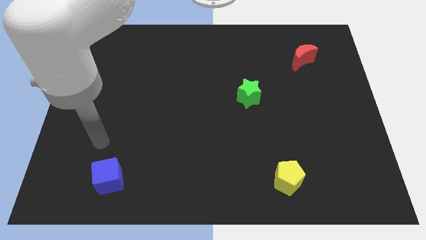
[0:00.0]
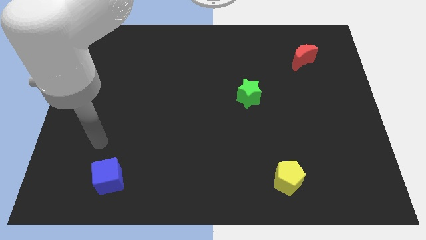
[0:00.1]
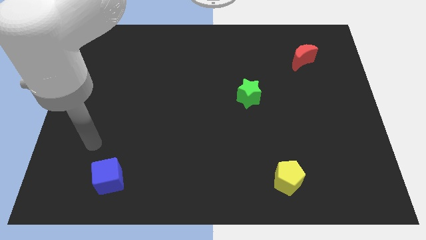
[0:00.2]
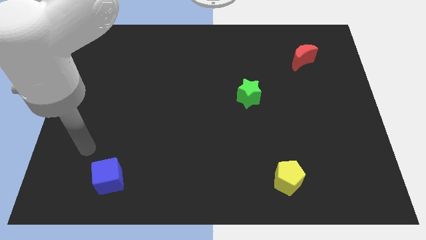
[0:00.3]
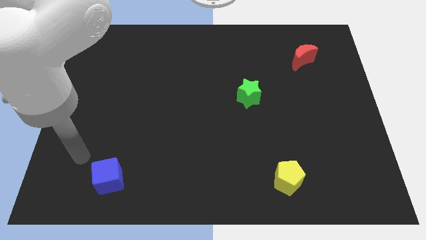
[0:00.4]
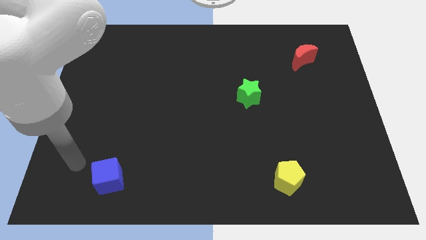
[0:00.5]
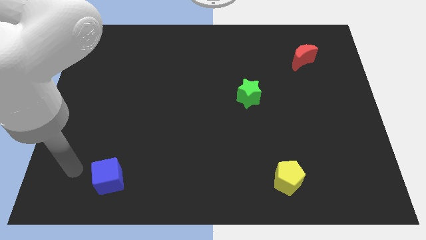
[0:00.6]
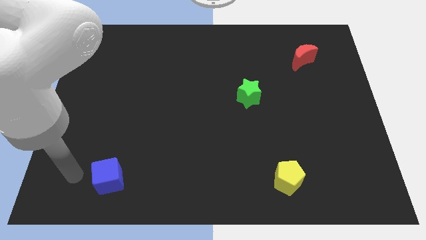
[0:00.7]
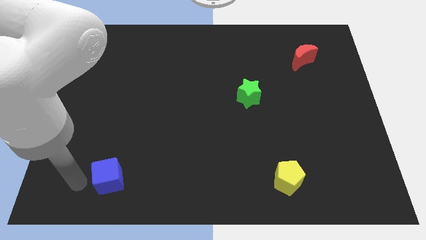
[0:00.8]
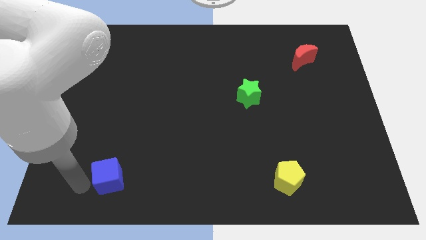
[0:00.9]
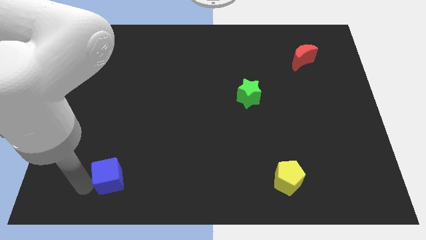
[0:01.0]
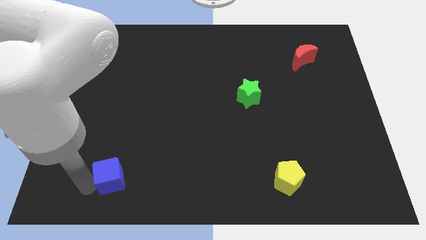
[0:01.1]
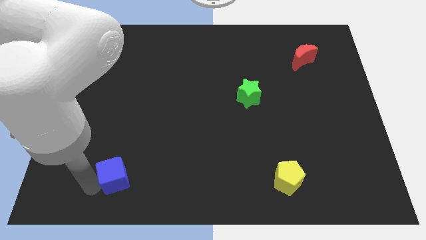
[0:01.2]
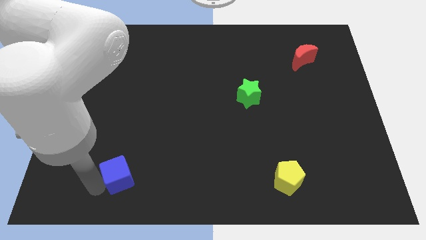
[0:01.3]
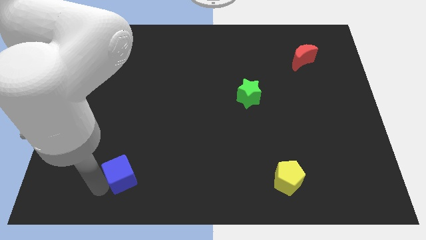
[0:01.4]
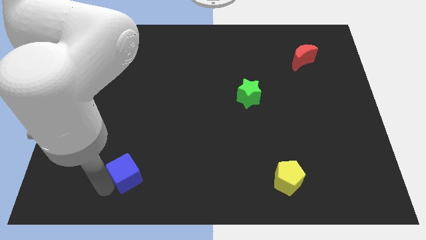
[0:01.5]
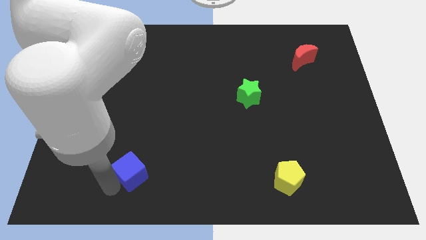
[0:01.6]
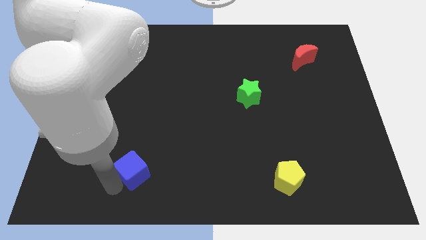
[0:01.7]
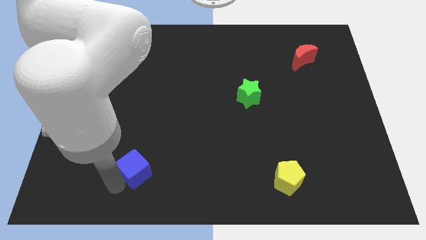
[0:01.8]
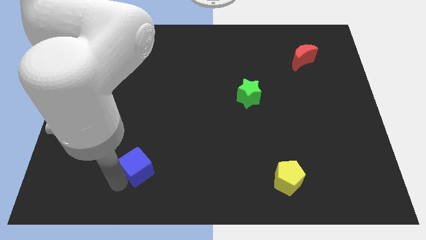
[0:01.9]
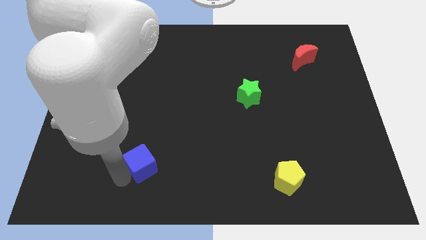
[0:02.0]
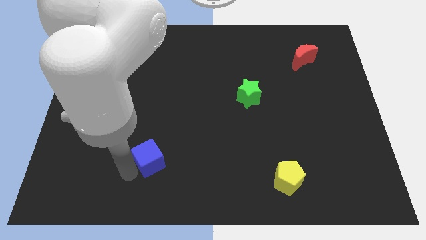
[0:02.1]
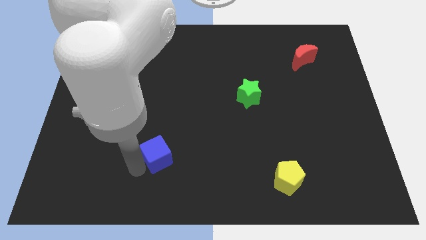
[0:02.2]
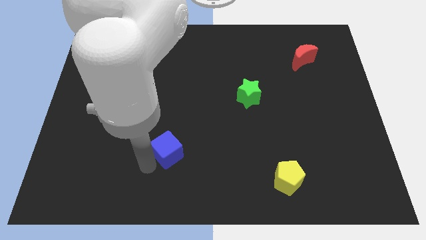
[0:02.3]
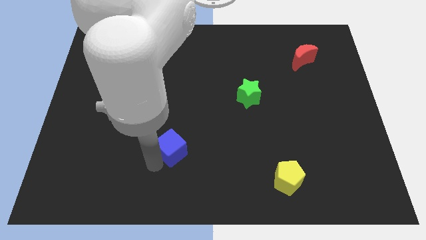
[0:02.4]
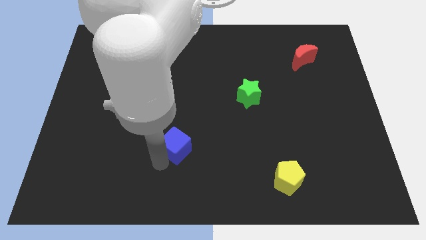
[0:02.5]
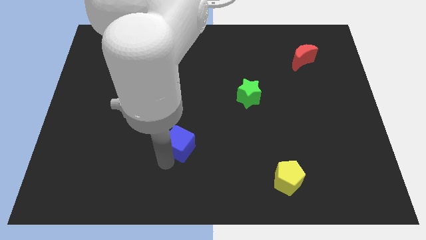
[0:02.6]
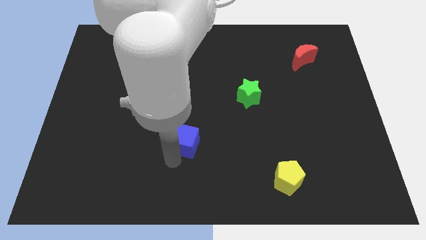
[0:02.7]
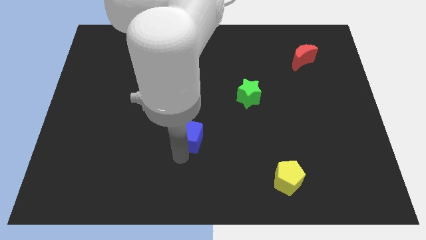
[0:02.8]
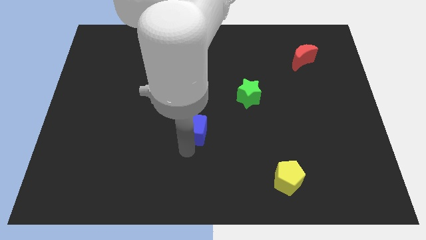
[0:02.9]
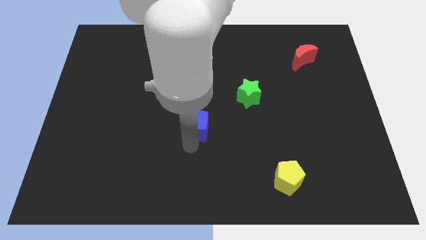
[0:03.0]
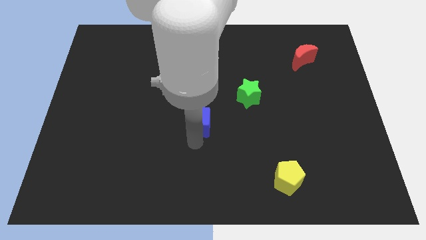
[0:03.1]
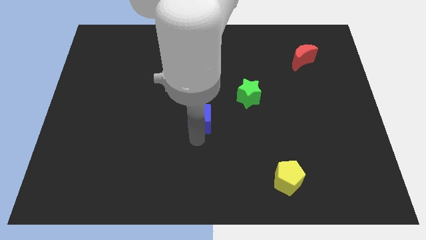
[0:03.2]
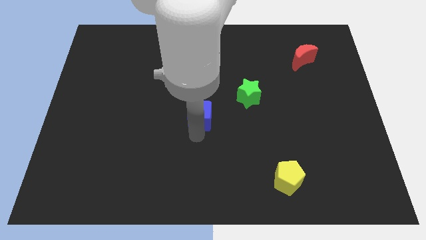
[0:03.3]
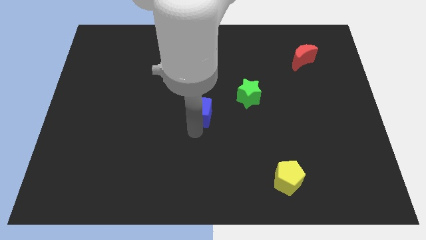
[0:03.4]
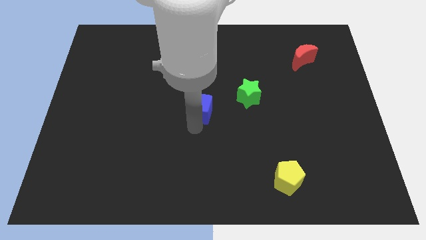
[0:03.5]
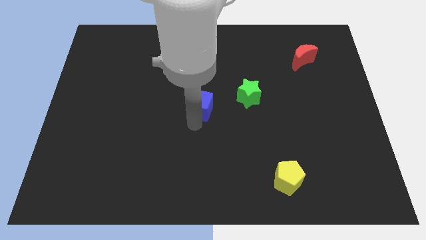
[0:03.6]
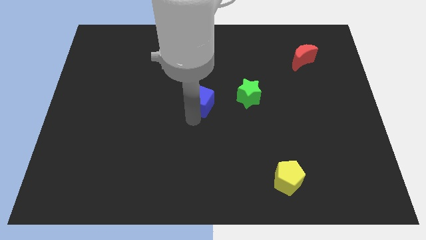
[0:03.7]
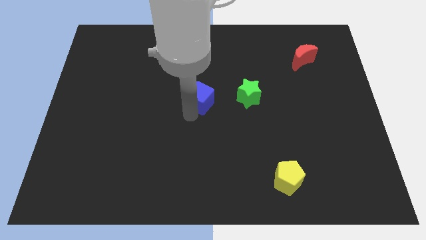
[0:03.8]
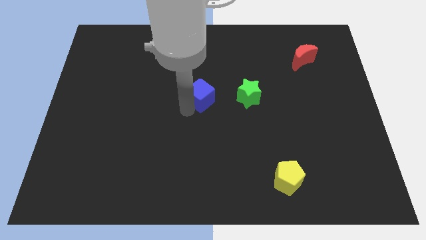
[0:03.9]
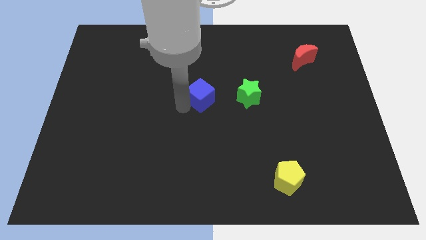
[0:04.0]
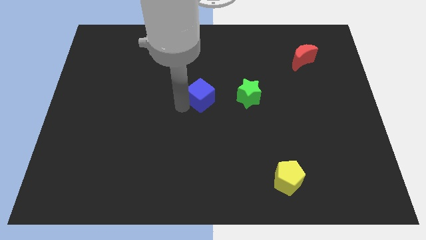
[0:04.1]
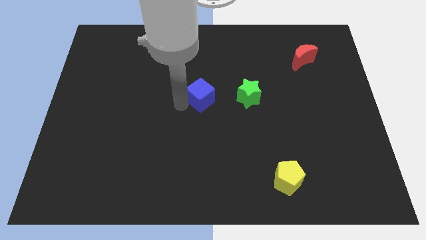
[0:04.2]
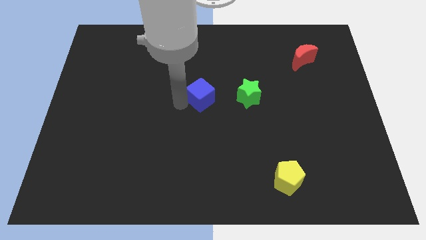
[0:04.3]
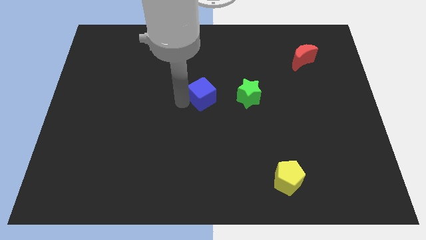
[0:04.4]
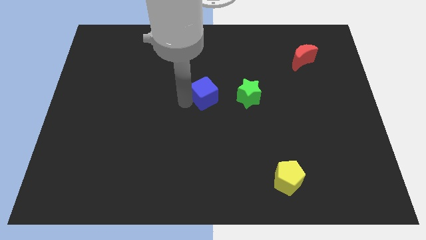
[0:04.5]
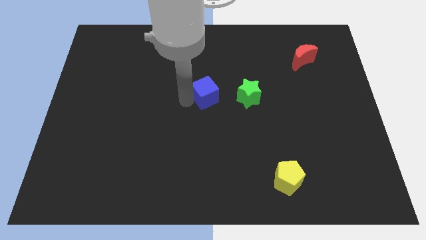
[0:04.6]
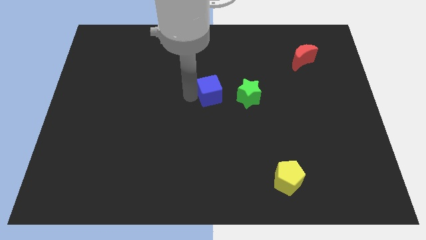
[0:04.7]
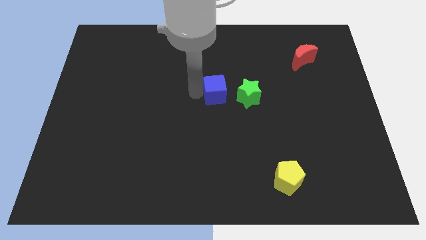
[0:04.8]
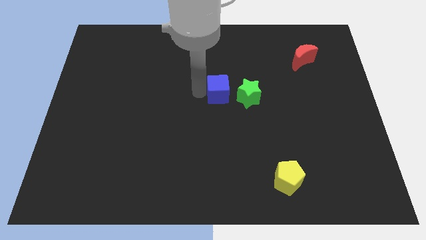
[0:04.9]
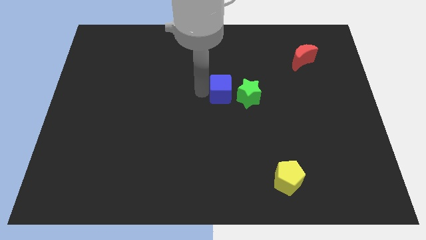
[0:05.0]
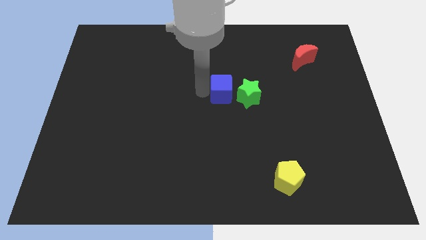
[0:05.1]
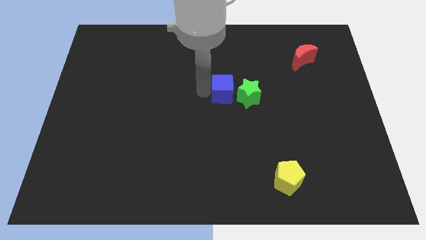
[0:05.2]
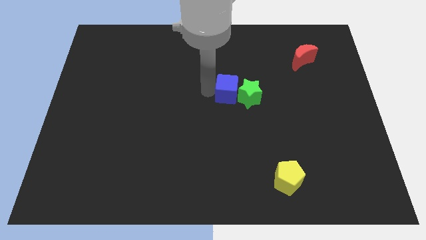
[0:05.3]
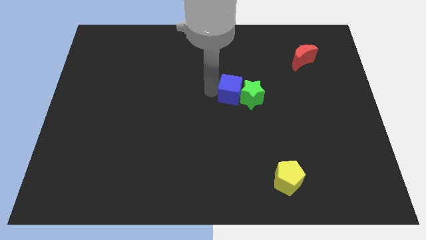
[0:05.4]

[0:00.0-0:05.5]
put the blue cube close to the green star

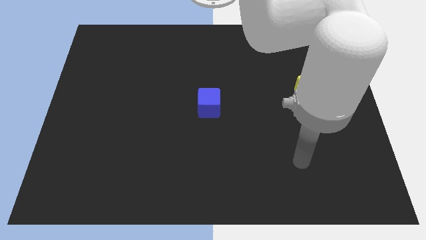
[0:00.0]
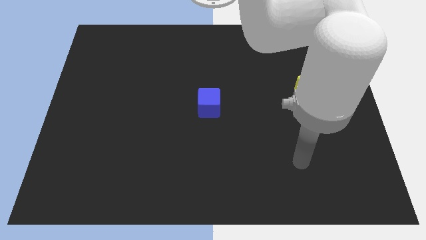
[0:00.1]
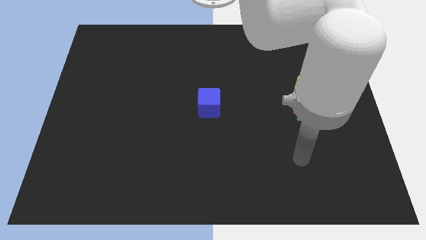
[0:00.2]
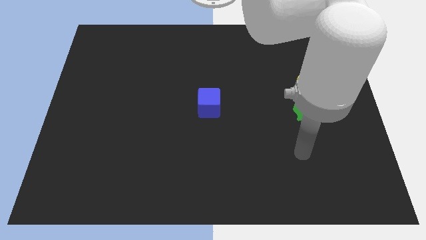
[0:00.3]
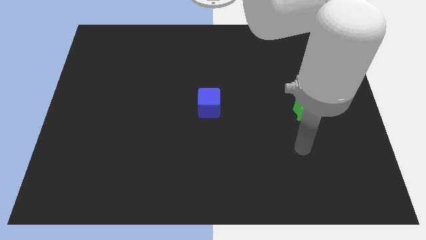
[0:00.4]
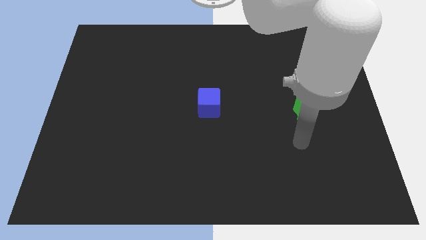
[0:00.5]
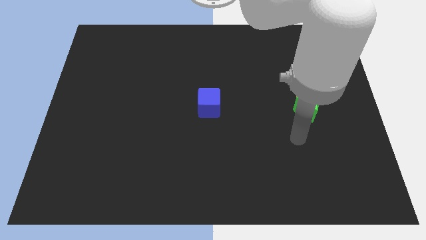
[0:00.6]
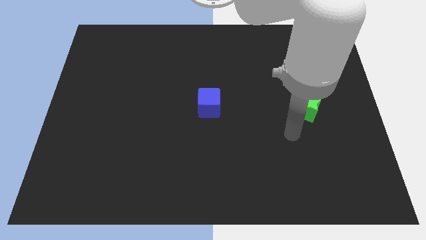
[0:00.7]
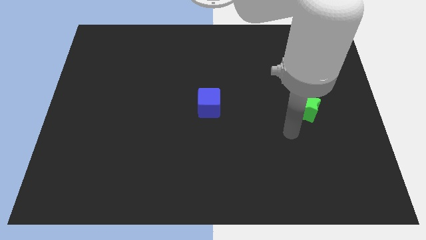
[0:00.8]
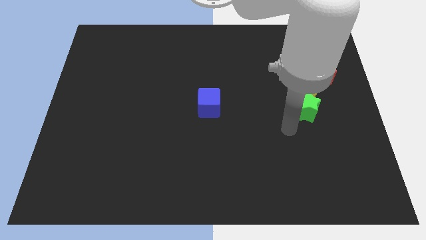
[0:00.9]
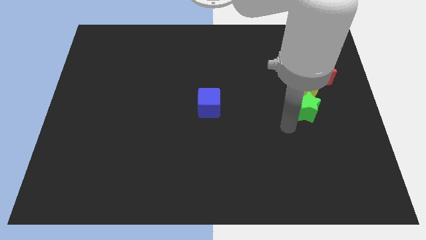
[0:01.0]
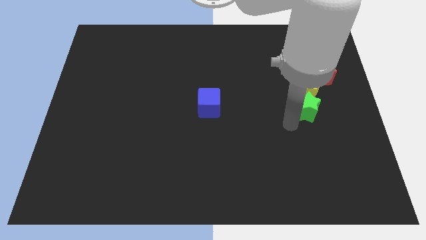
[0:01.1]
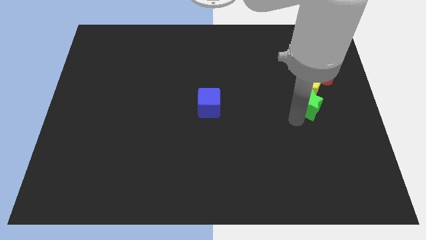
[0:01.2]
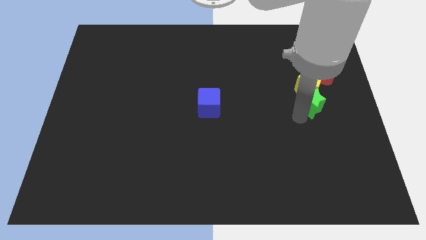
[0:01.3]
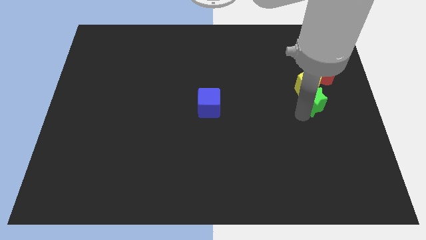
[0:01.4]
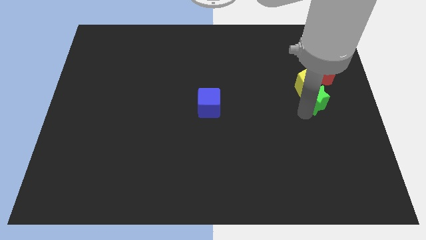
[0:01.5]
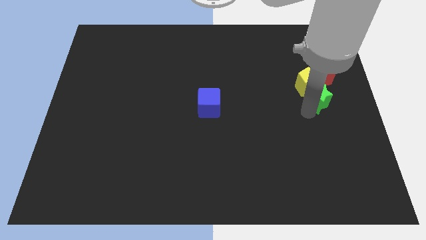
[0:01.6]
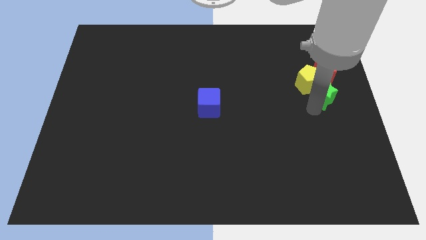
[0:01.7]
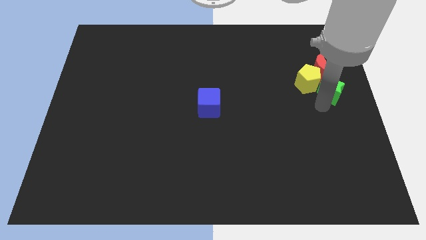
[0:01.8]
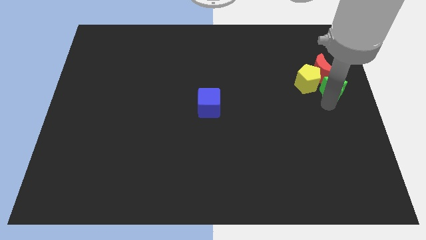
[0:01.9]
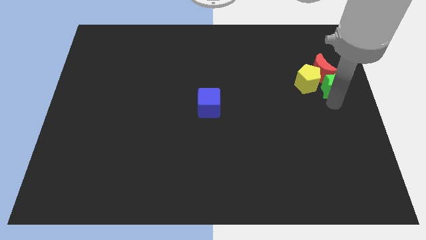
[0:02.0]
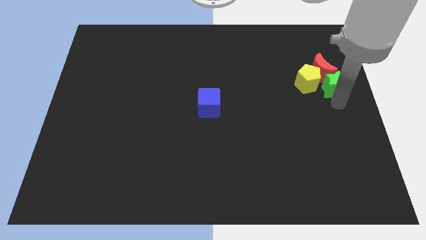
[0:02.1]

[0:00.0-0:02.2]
put the green block close to the red block

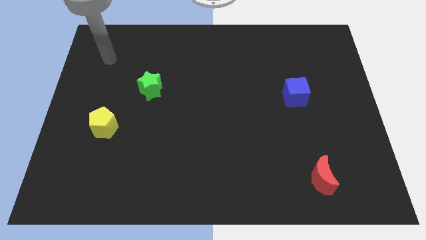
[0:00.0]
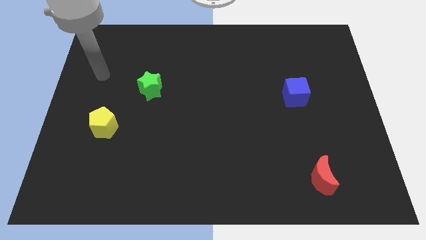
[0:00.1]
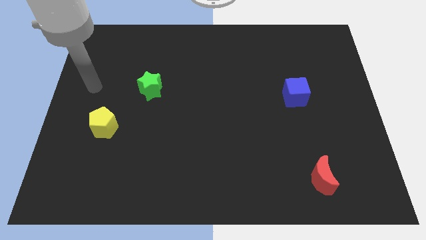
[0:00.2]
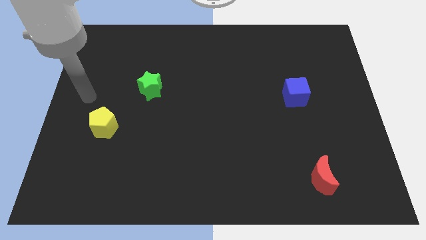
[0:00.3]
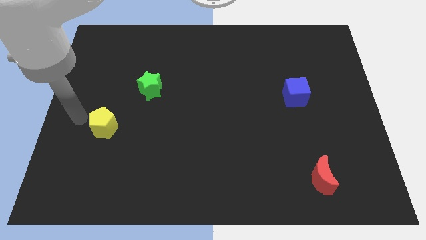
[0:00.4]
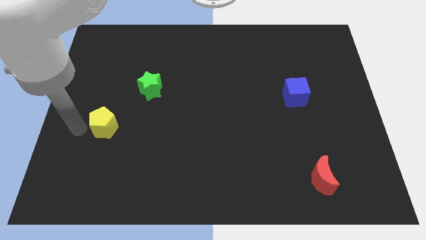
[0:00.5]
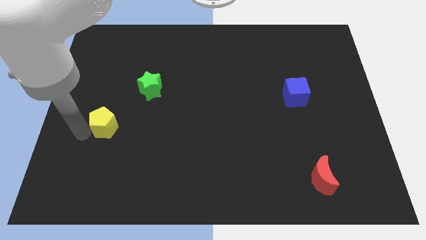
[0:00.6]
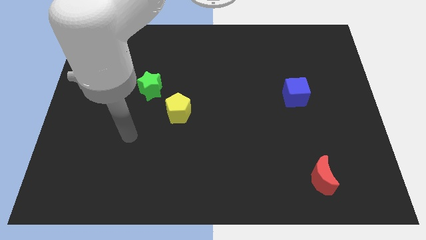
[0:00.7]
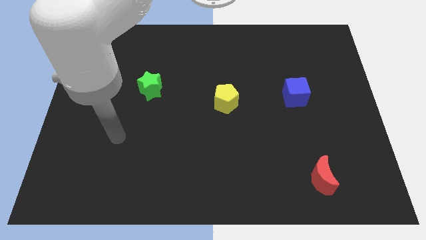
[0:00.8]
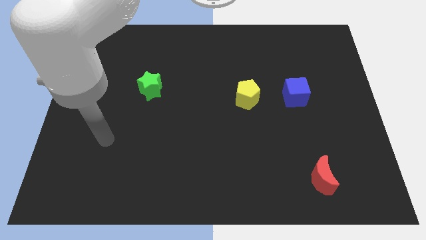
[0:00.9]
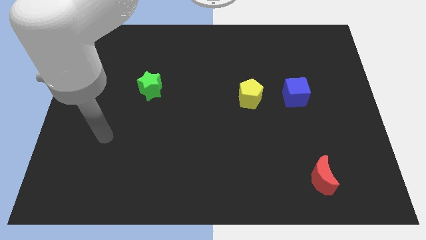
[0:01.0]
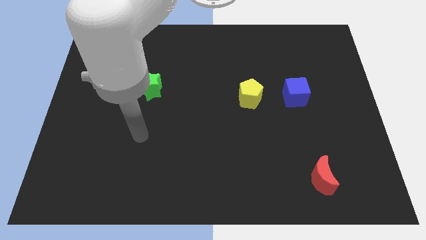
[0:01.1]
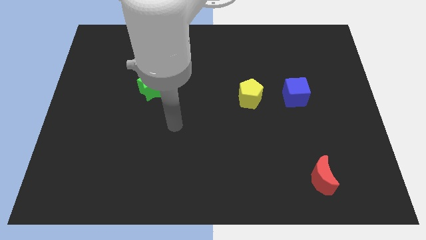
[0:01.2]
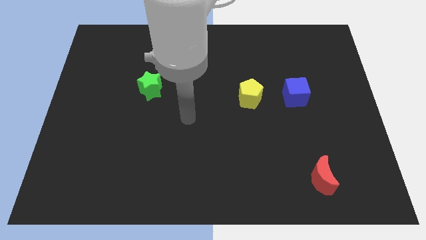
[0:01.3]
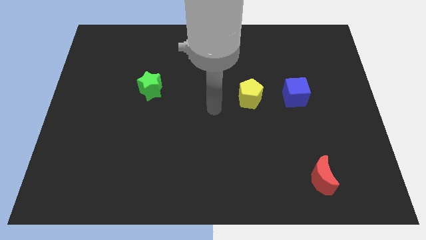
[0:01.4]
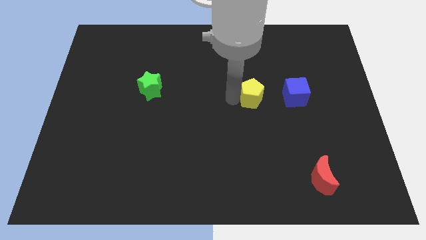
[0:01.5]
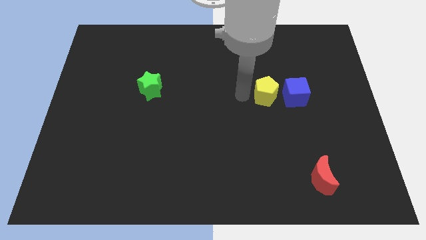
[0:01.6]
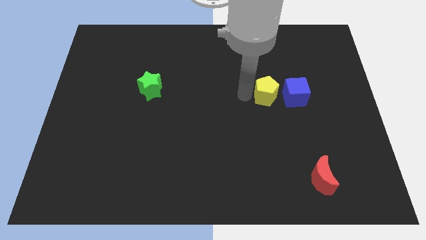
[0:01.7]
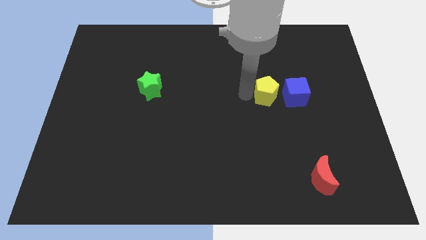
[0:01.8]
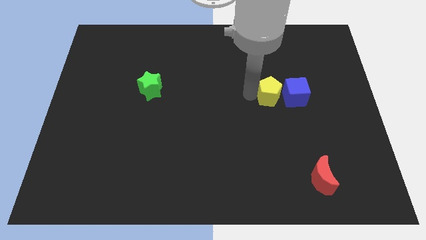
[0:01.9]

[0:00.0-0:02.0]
move the yellow block next to the blue block
